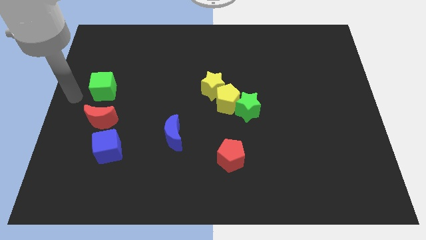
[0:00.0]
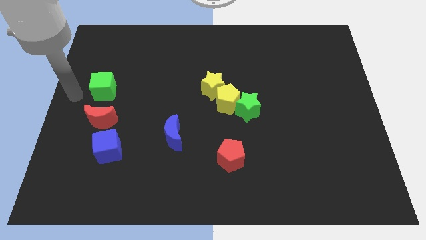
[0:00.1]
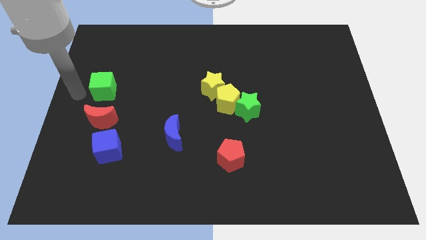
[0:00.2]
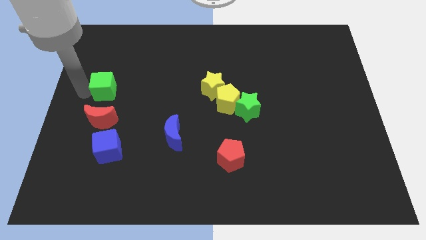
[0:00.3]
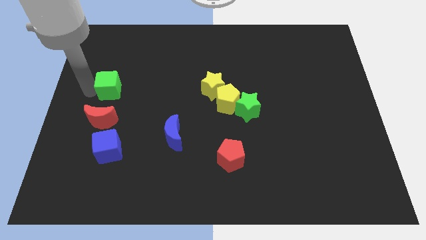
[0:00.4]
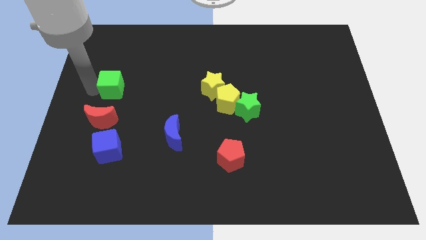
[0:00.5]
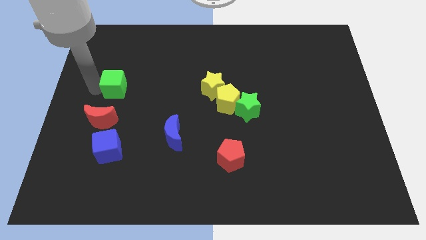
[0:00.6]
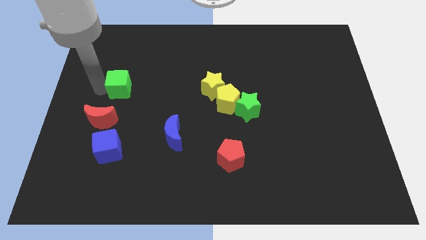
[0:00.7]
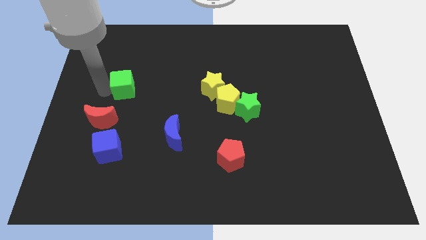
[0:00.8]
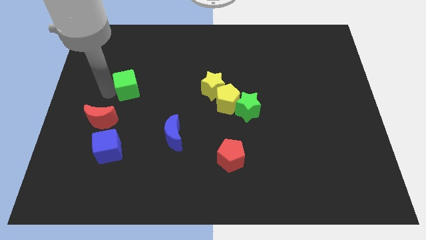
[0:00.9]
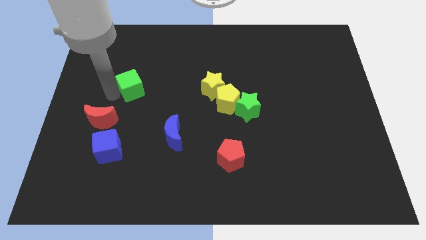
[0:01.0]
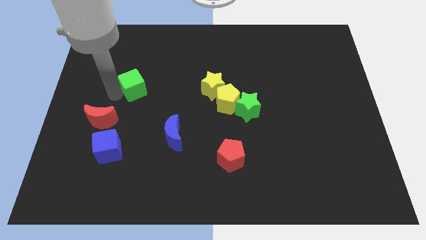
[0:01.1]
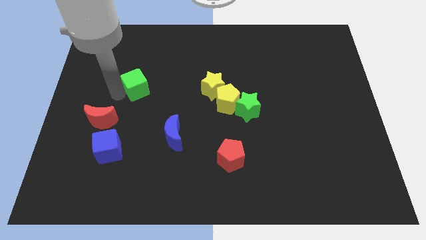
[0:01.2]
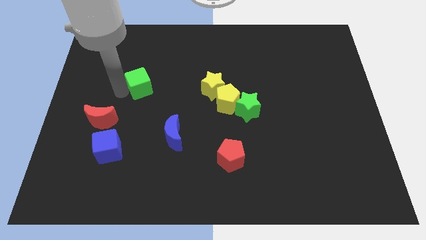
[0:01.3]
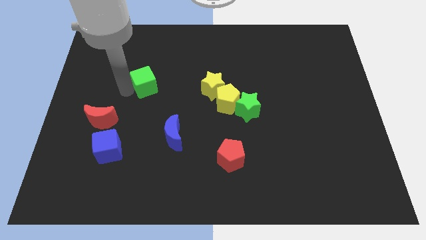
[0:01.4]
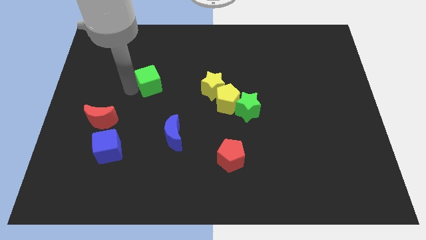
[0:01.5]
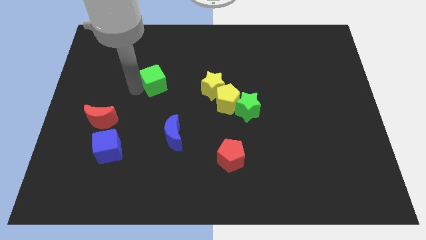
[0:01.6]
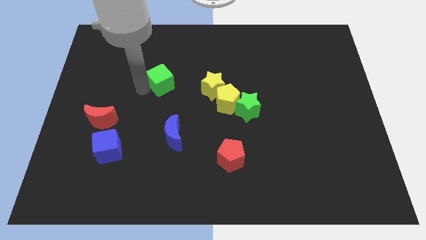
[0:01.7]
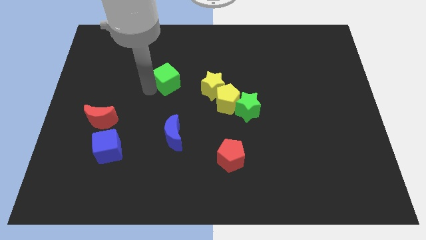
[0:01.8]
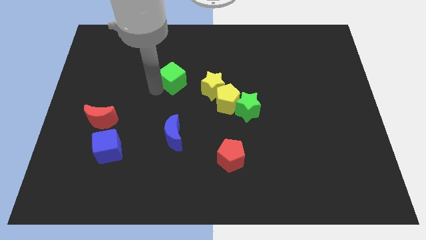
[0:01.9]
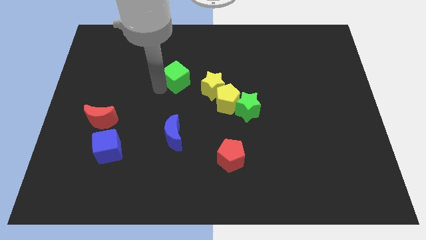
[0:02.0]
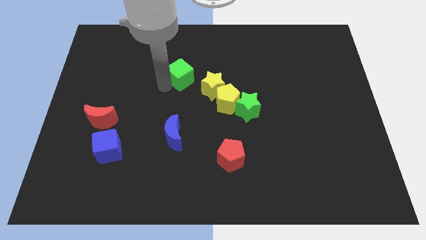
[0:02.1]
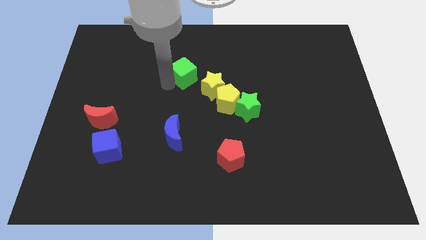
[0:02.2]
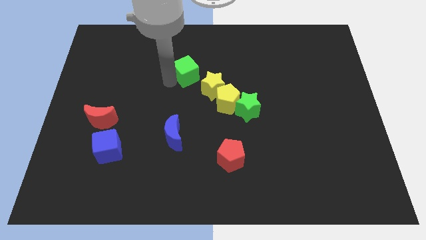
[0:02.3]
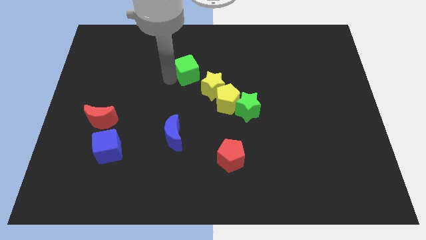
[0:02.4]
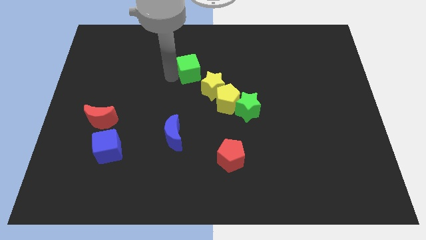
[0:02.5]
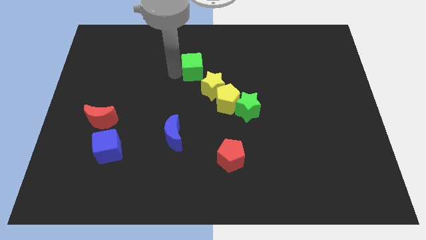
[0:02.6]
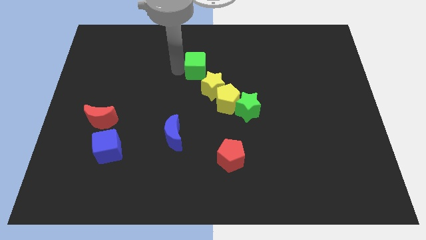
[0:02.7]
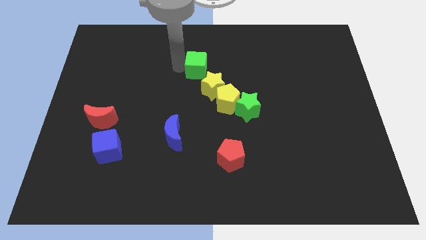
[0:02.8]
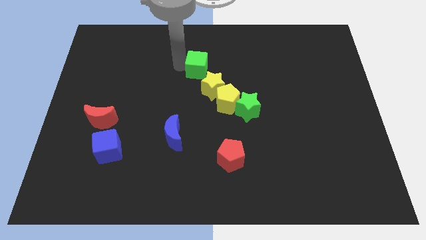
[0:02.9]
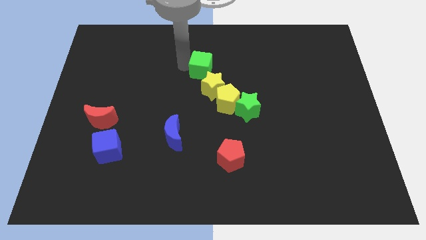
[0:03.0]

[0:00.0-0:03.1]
push the green cube to the top of the green star

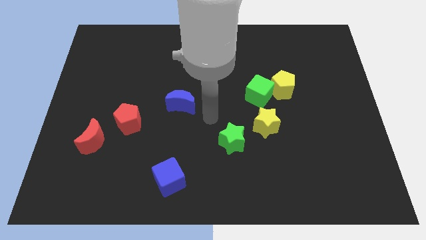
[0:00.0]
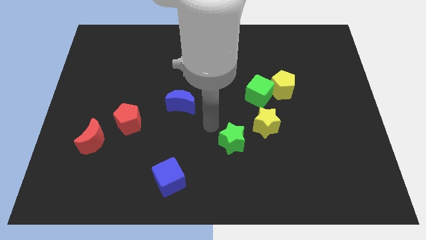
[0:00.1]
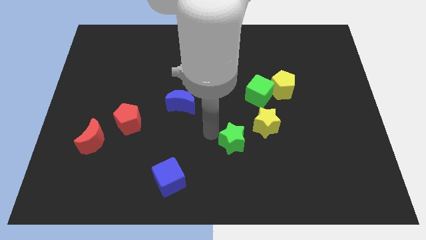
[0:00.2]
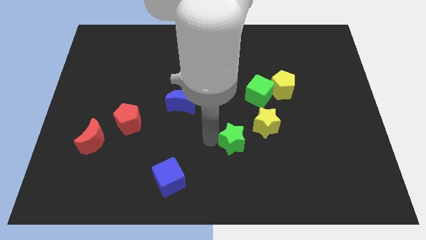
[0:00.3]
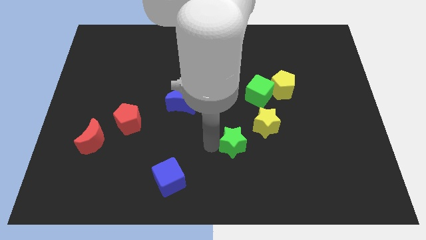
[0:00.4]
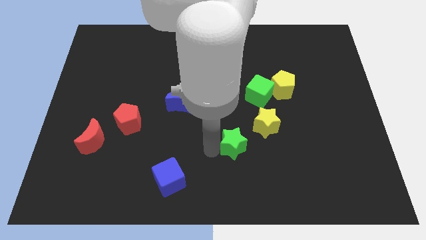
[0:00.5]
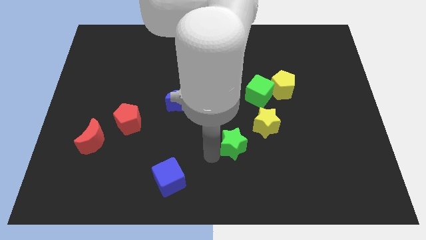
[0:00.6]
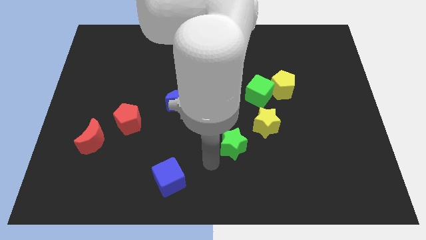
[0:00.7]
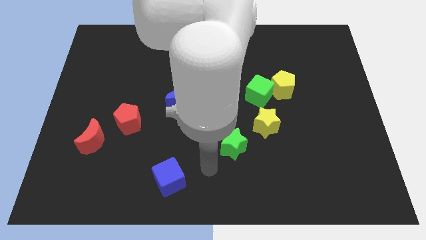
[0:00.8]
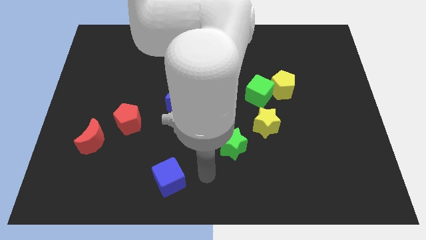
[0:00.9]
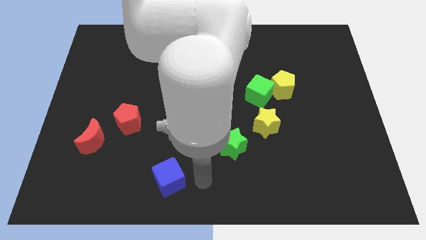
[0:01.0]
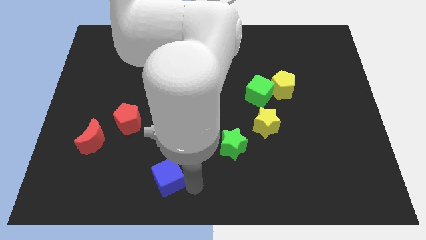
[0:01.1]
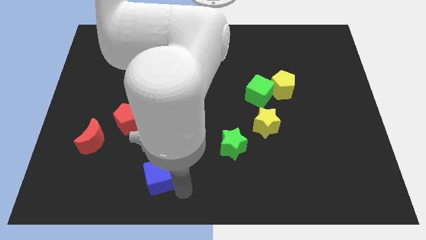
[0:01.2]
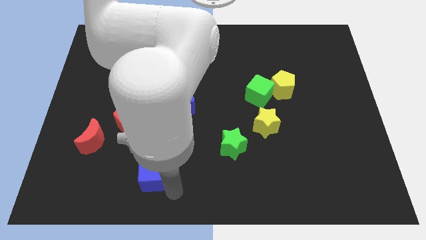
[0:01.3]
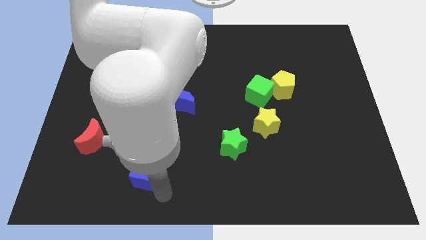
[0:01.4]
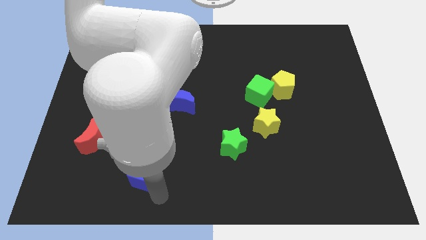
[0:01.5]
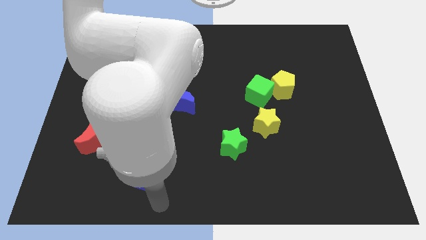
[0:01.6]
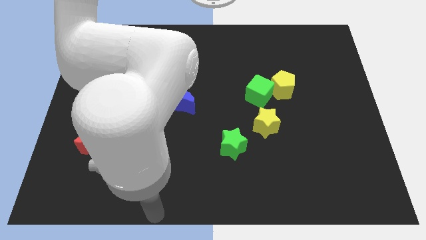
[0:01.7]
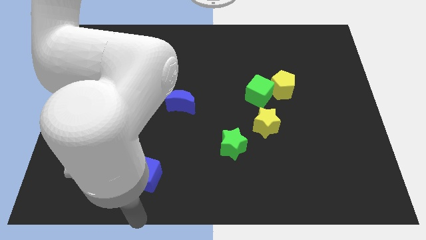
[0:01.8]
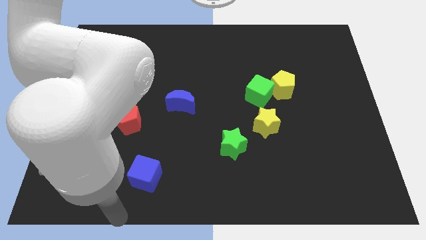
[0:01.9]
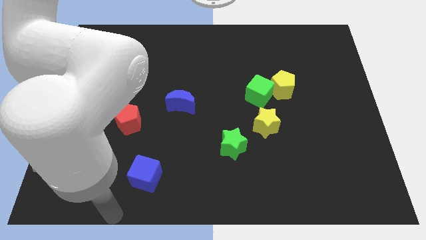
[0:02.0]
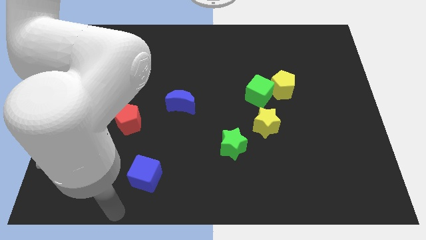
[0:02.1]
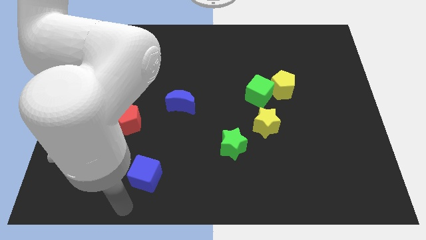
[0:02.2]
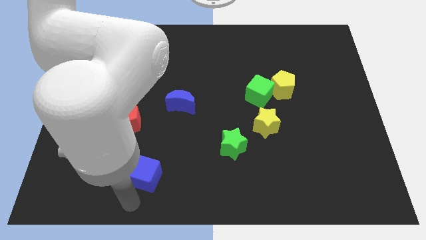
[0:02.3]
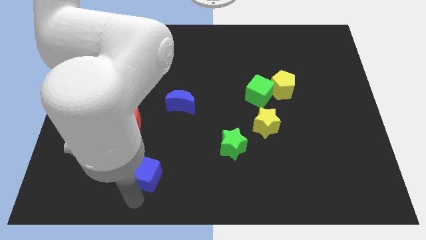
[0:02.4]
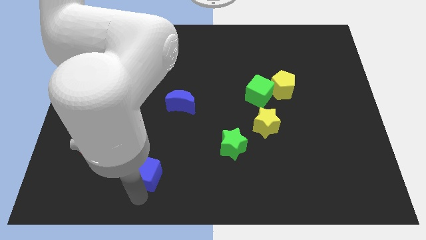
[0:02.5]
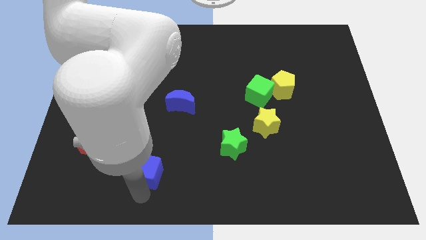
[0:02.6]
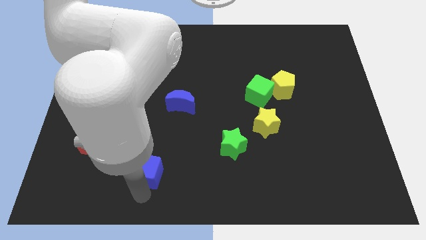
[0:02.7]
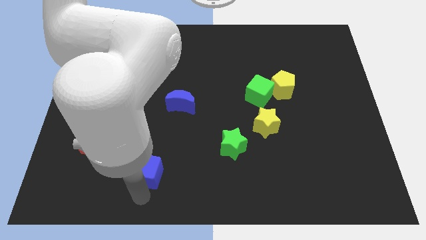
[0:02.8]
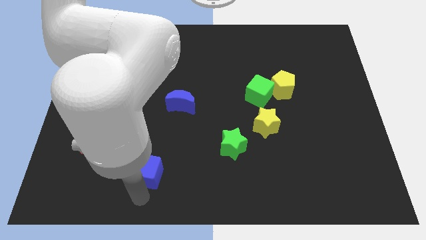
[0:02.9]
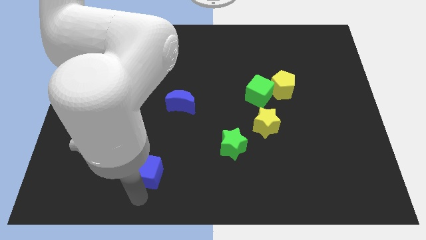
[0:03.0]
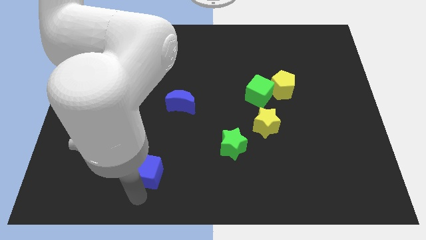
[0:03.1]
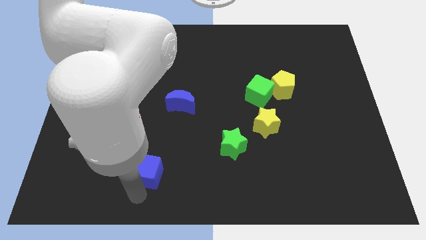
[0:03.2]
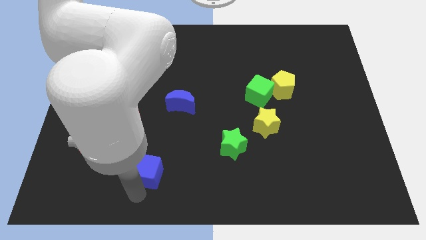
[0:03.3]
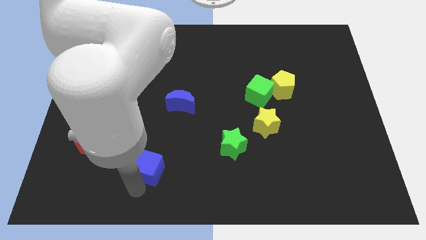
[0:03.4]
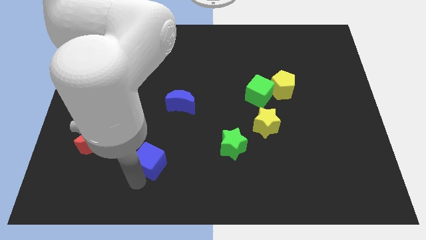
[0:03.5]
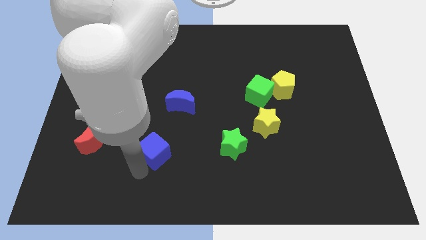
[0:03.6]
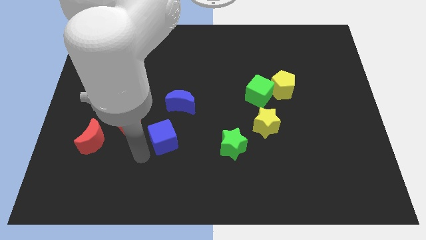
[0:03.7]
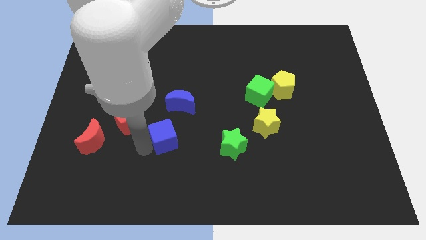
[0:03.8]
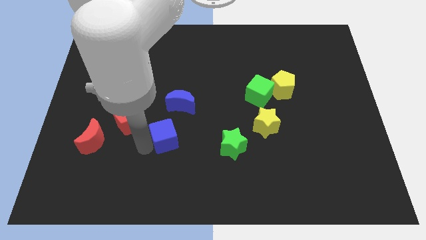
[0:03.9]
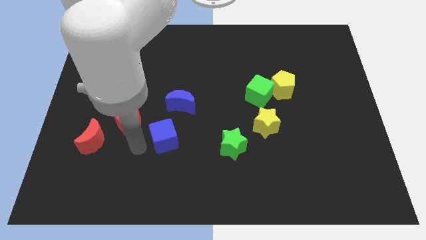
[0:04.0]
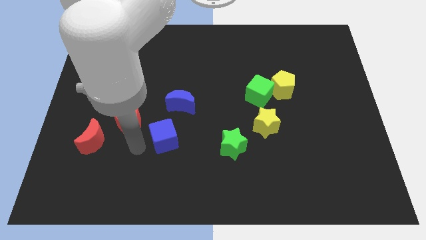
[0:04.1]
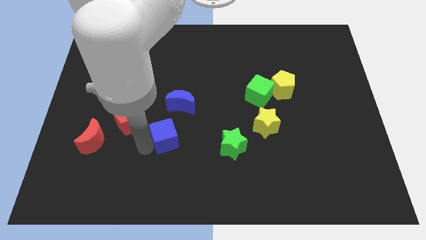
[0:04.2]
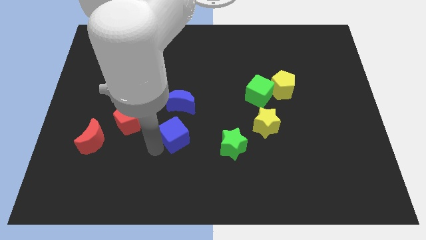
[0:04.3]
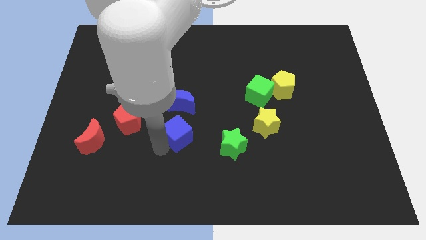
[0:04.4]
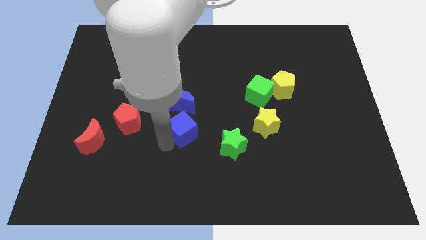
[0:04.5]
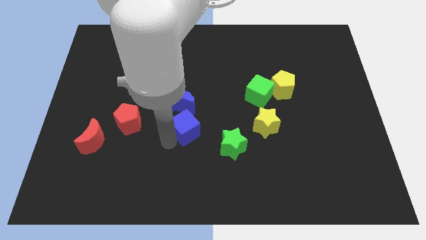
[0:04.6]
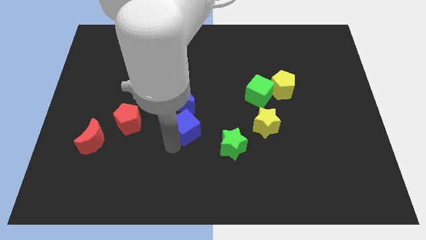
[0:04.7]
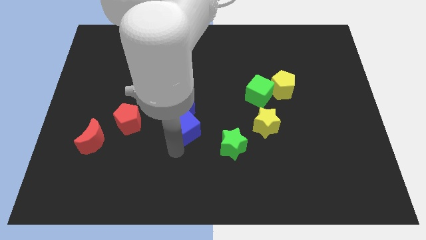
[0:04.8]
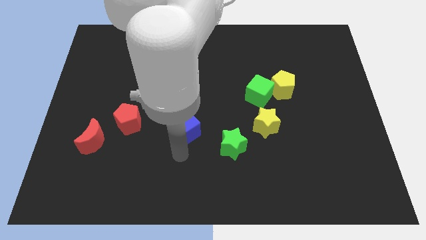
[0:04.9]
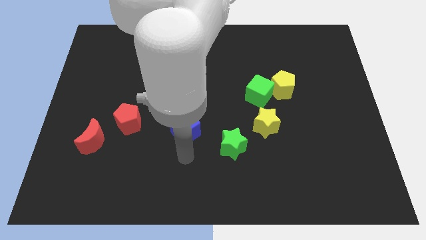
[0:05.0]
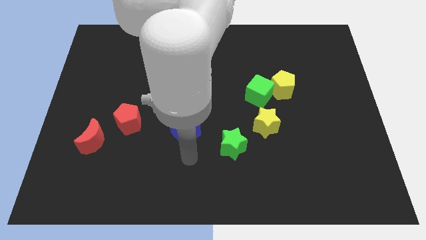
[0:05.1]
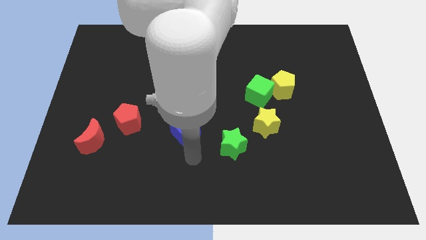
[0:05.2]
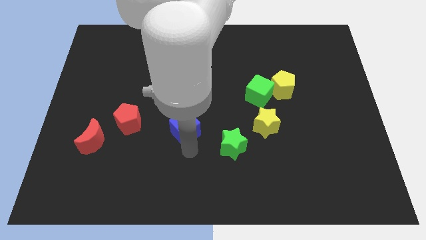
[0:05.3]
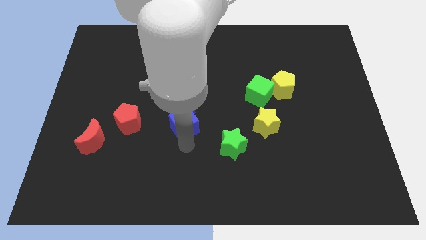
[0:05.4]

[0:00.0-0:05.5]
place blue cube below blue moon

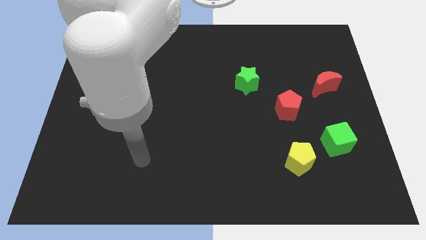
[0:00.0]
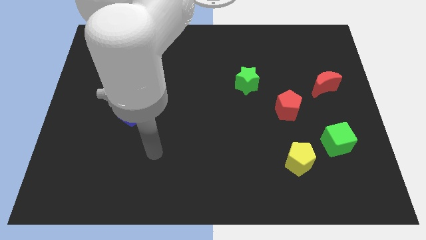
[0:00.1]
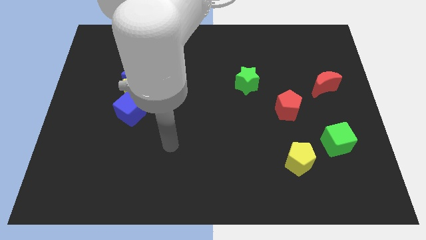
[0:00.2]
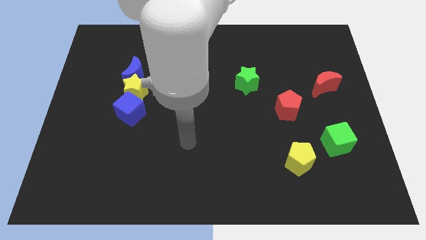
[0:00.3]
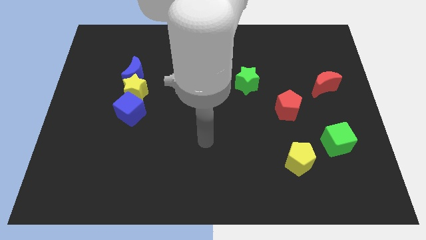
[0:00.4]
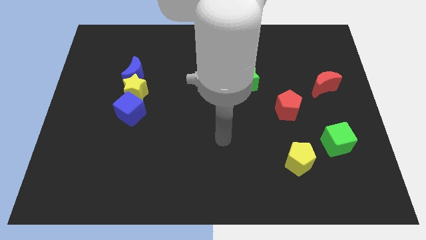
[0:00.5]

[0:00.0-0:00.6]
move the arm to the center of the board
